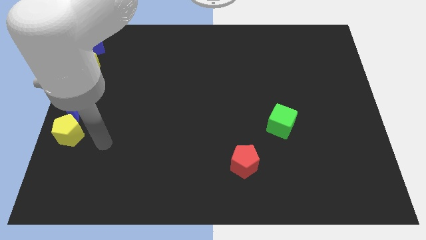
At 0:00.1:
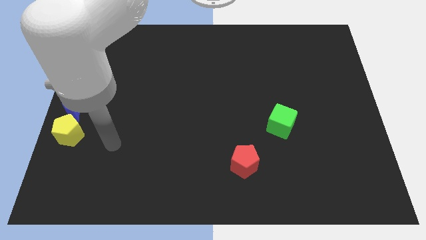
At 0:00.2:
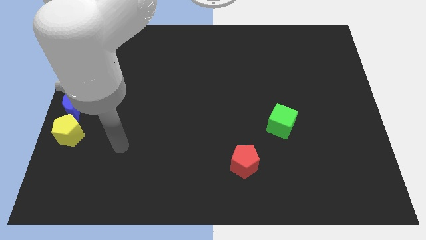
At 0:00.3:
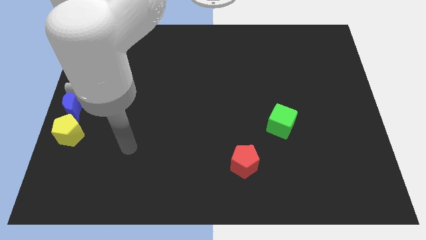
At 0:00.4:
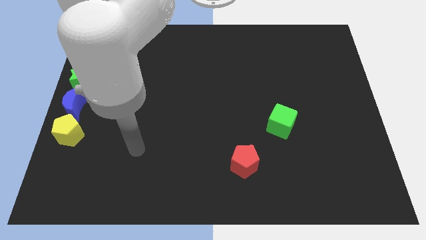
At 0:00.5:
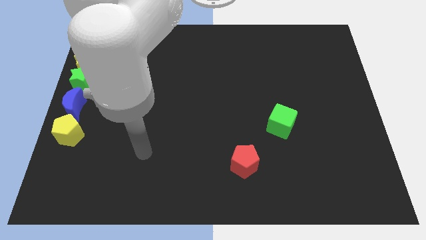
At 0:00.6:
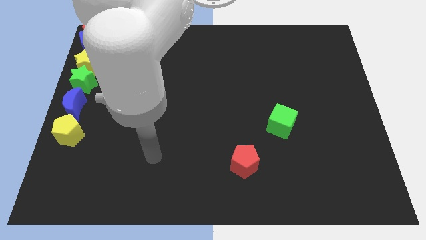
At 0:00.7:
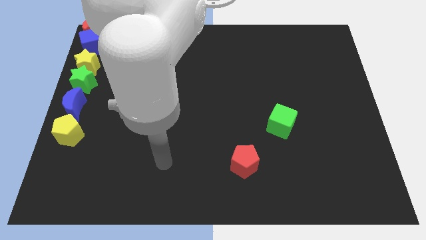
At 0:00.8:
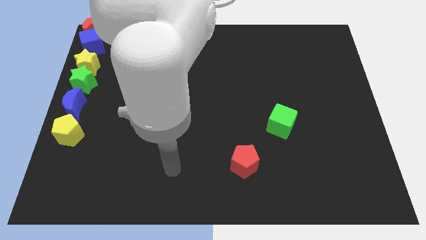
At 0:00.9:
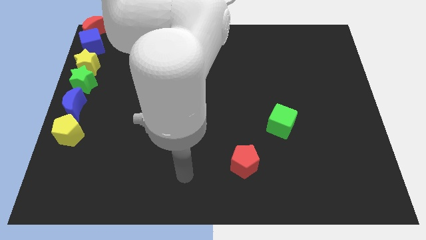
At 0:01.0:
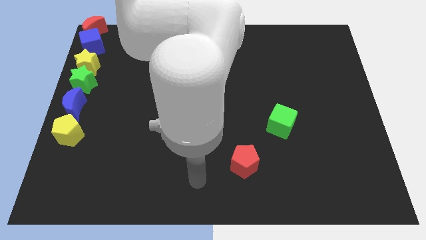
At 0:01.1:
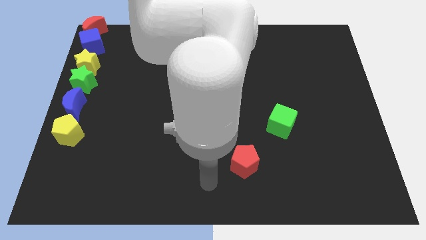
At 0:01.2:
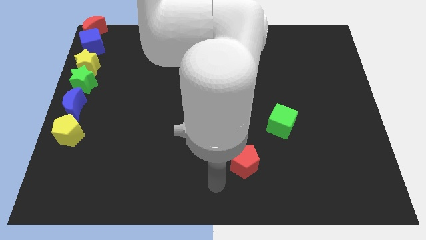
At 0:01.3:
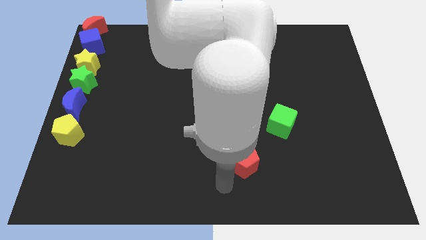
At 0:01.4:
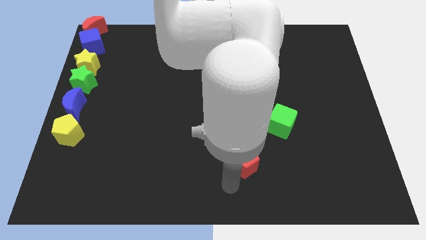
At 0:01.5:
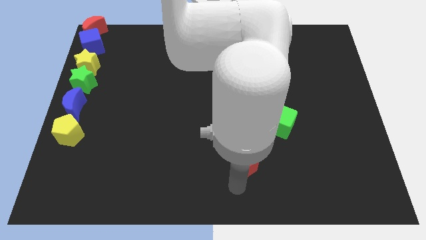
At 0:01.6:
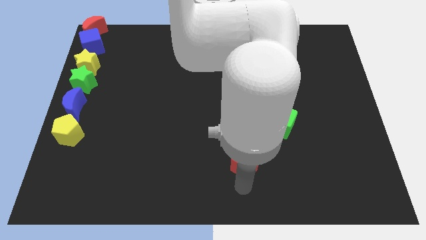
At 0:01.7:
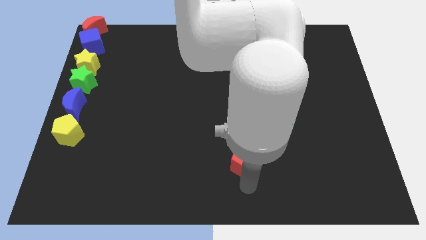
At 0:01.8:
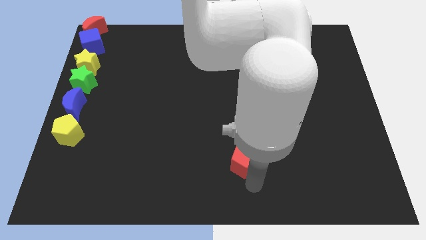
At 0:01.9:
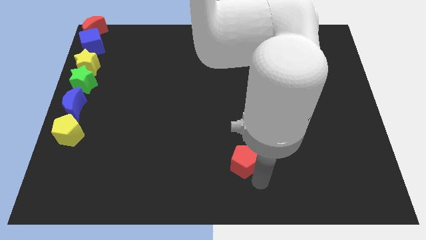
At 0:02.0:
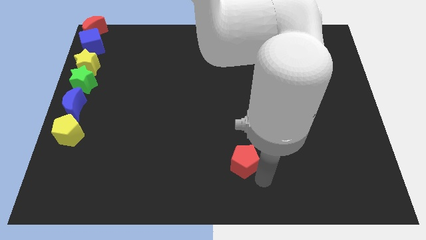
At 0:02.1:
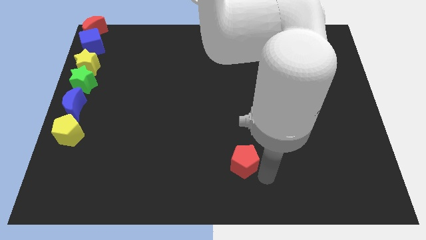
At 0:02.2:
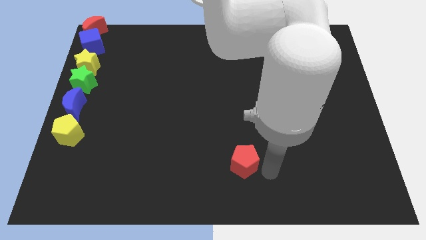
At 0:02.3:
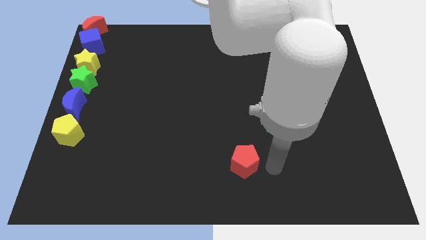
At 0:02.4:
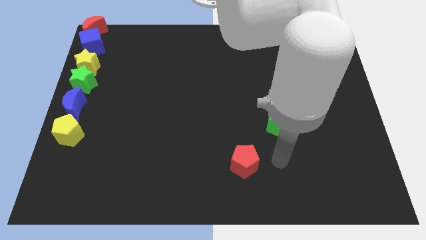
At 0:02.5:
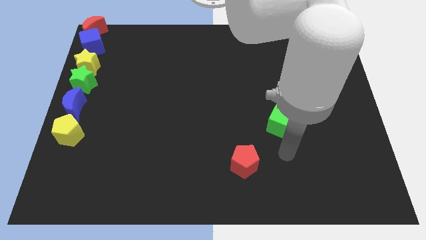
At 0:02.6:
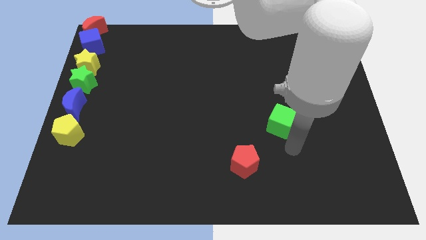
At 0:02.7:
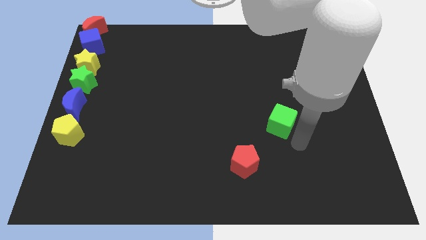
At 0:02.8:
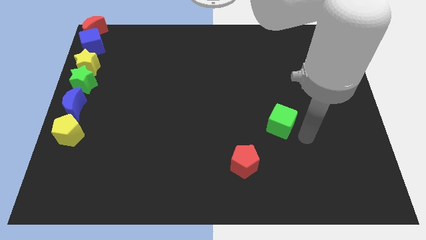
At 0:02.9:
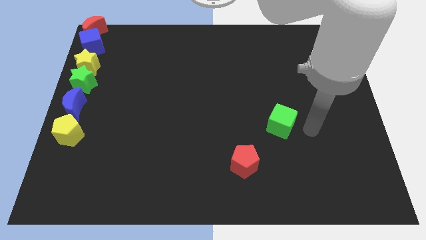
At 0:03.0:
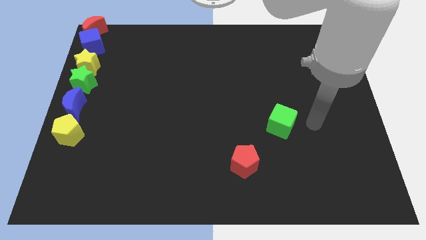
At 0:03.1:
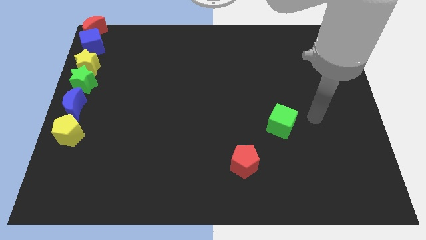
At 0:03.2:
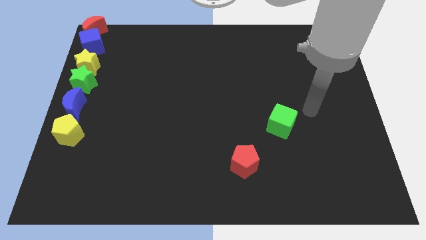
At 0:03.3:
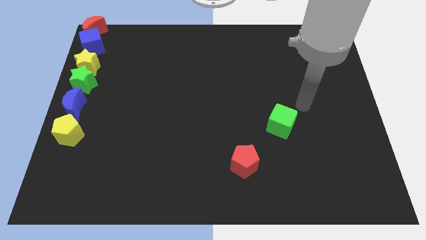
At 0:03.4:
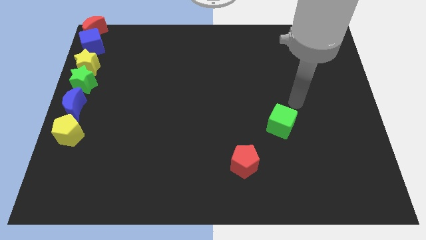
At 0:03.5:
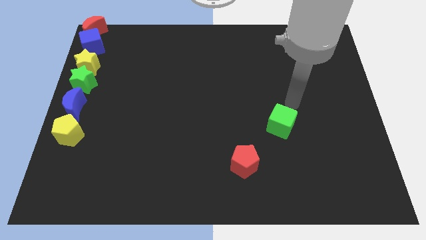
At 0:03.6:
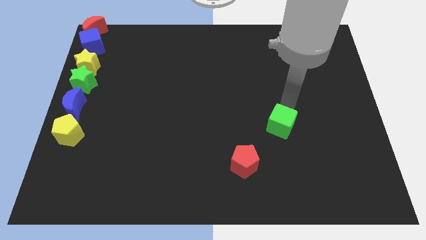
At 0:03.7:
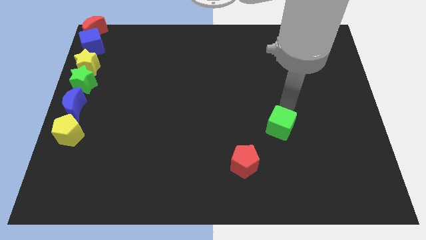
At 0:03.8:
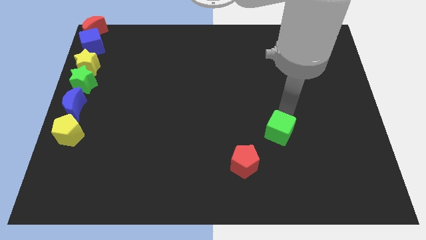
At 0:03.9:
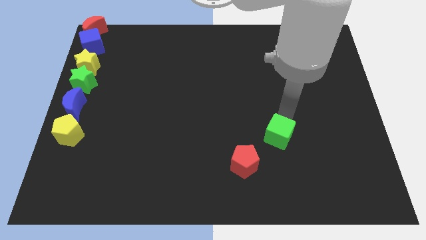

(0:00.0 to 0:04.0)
move the arm away and place it over green cube

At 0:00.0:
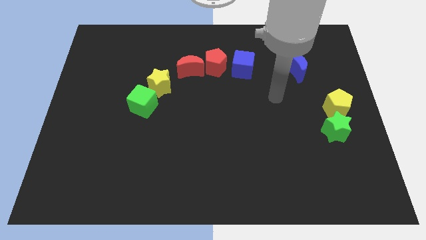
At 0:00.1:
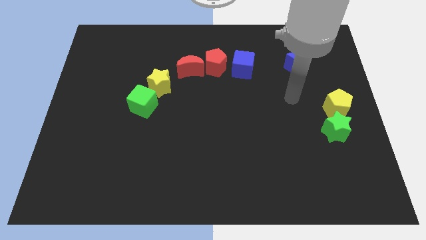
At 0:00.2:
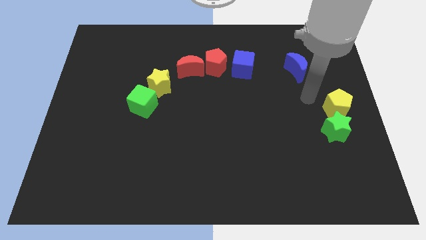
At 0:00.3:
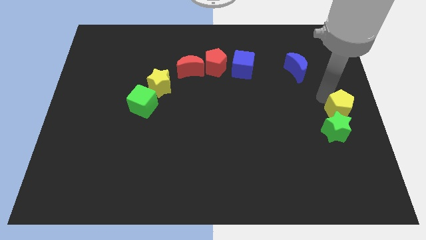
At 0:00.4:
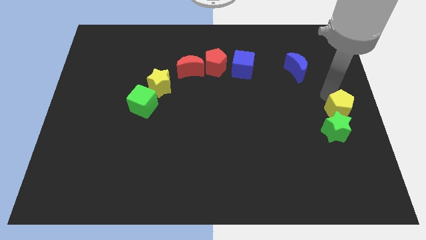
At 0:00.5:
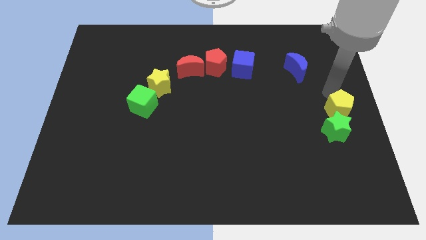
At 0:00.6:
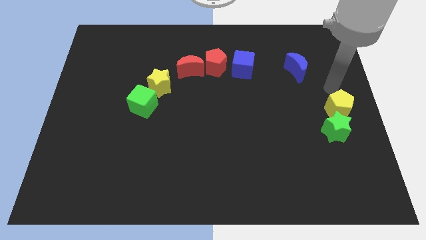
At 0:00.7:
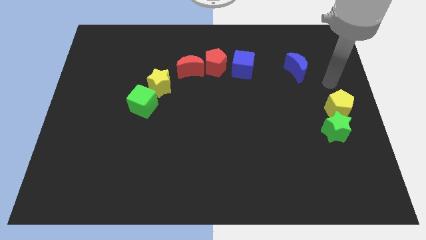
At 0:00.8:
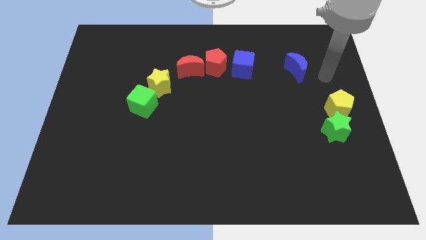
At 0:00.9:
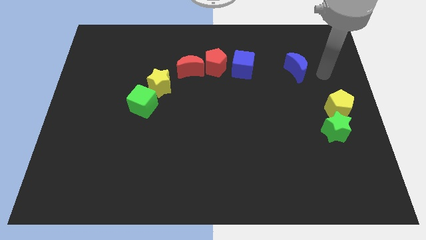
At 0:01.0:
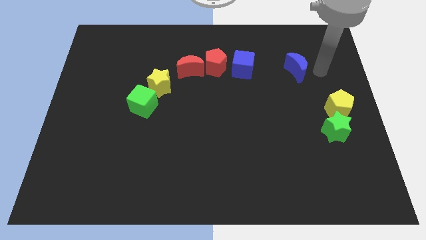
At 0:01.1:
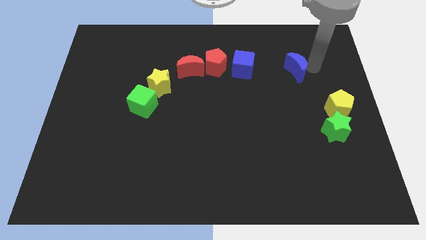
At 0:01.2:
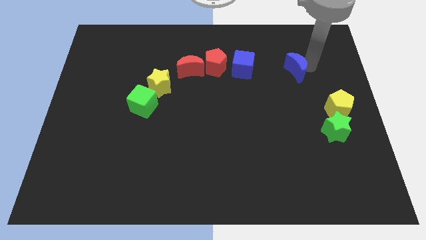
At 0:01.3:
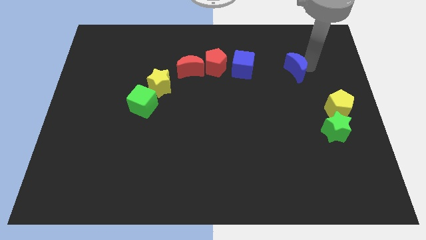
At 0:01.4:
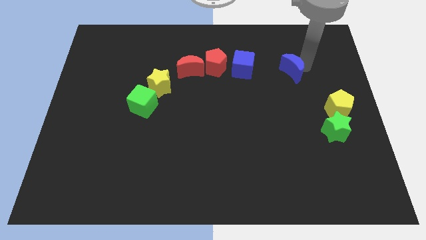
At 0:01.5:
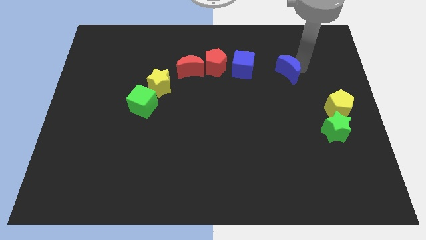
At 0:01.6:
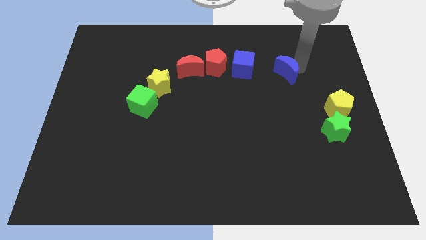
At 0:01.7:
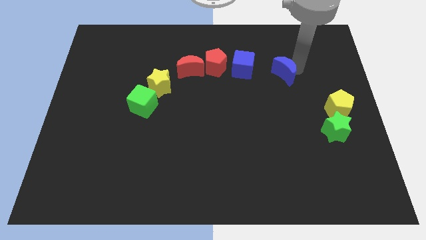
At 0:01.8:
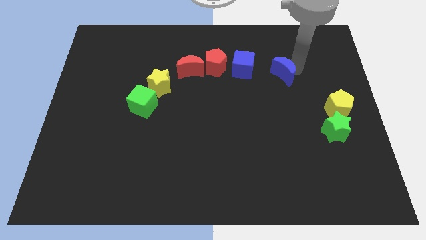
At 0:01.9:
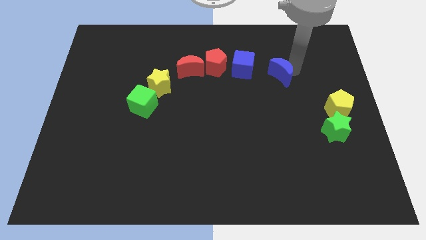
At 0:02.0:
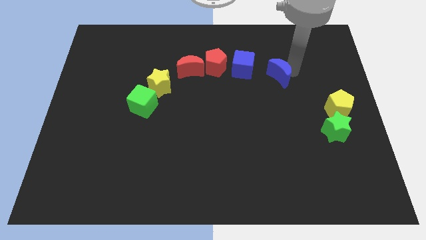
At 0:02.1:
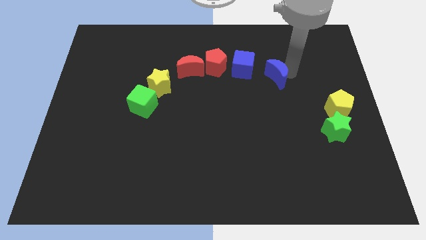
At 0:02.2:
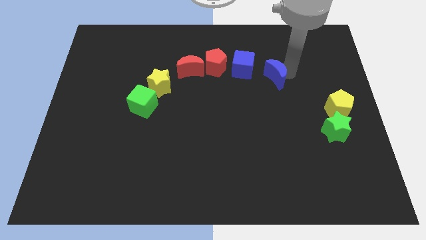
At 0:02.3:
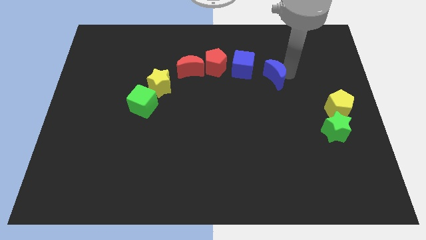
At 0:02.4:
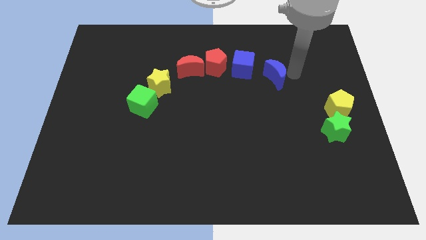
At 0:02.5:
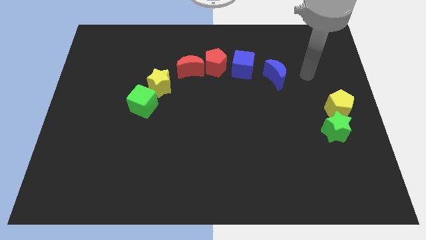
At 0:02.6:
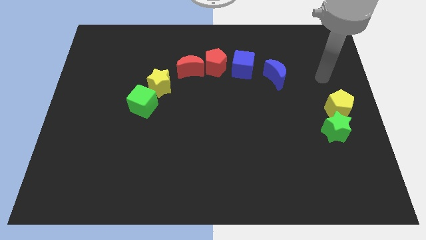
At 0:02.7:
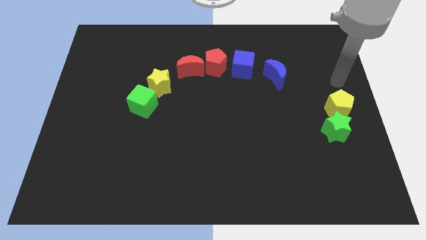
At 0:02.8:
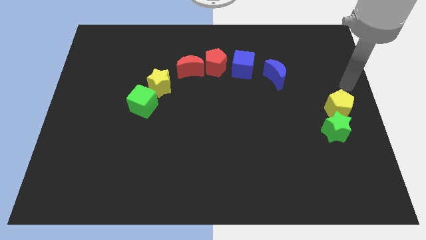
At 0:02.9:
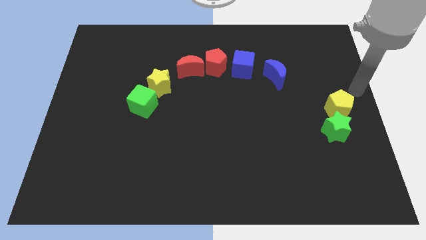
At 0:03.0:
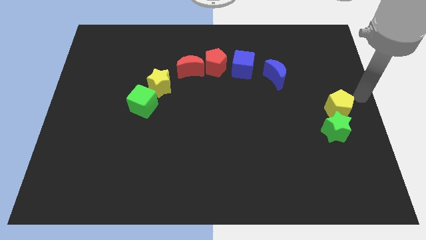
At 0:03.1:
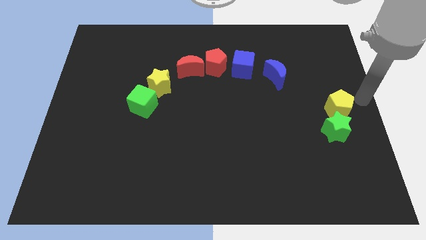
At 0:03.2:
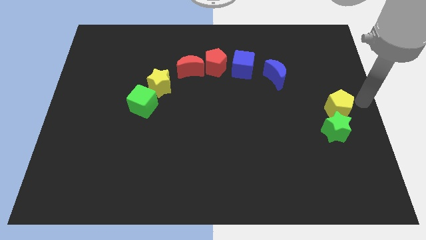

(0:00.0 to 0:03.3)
push the blue moon right of blue cube

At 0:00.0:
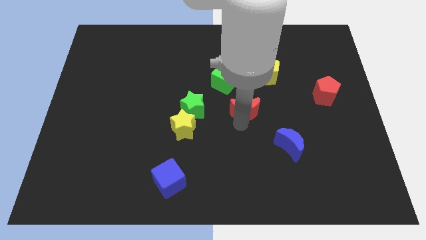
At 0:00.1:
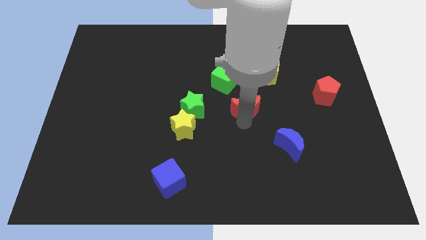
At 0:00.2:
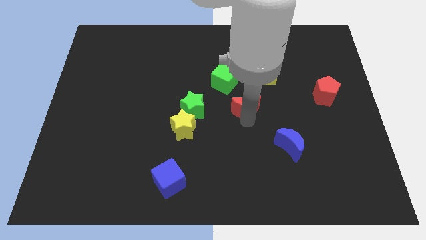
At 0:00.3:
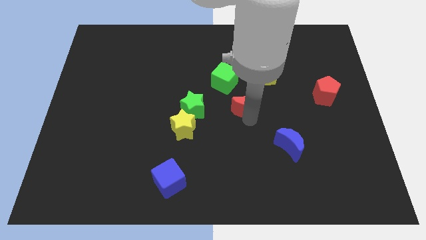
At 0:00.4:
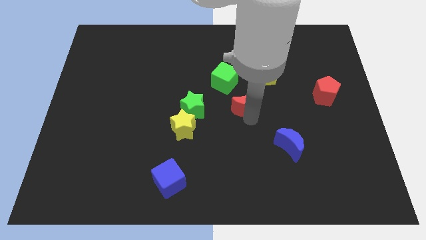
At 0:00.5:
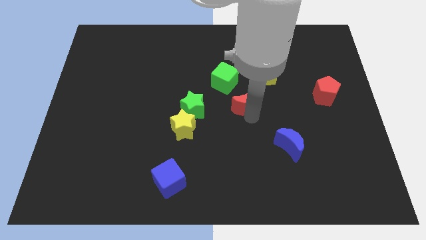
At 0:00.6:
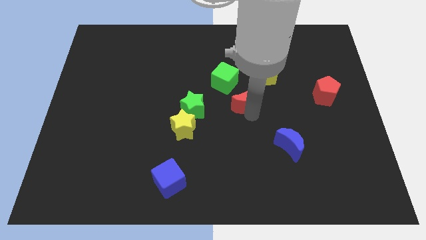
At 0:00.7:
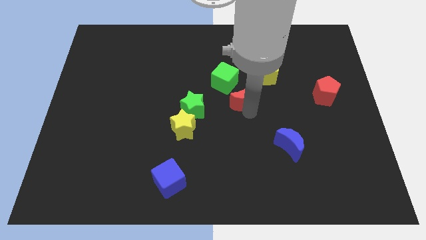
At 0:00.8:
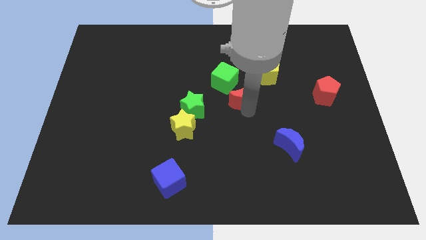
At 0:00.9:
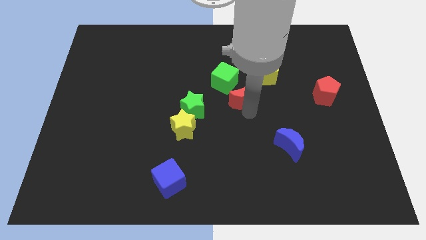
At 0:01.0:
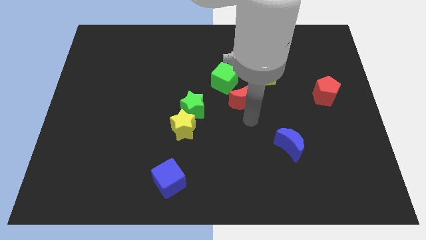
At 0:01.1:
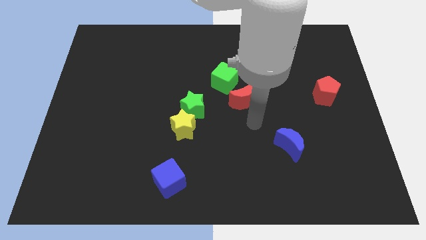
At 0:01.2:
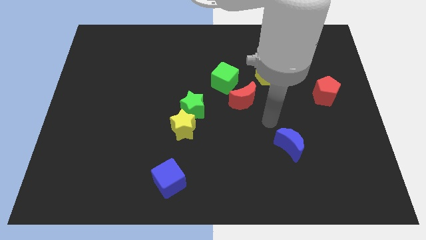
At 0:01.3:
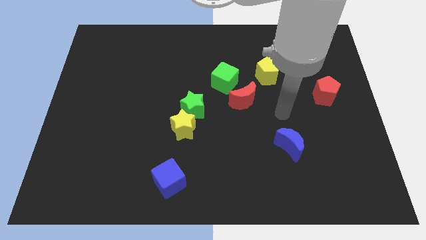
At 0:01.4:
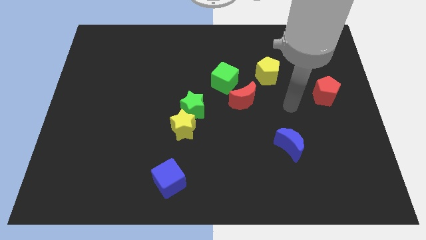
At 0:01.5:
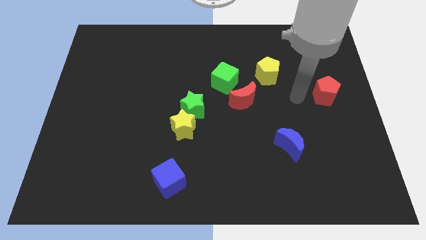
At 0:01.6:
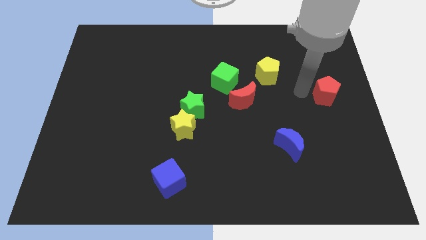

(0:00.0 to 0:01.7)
push the red moon close to the green cube
